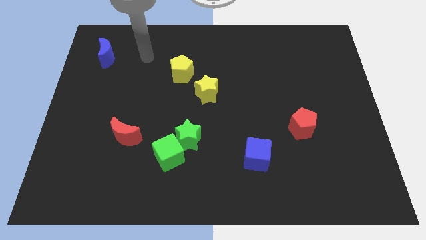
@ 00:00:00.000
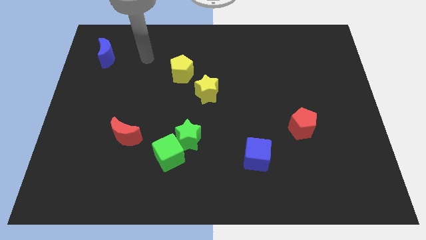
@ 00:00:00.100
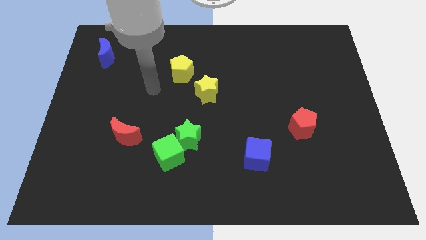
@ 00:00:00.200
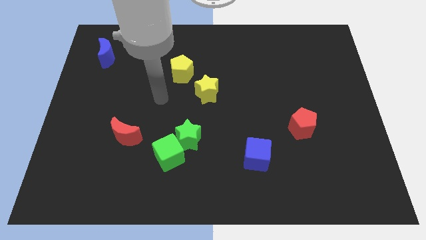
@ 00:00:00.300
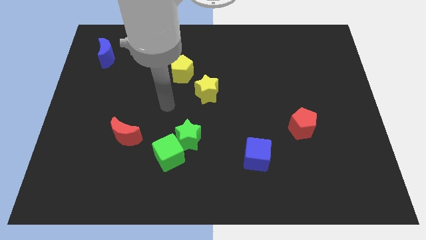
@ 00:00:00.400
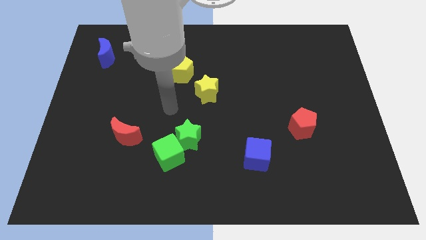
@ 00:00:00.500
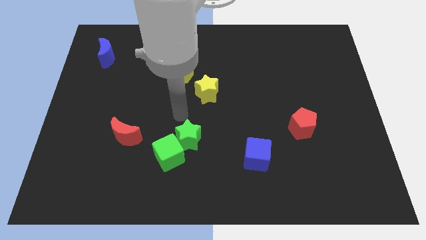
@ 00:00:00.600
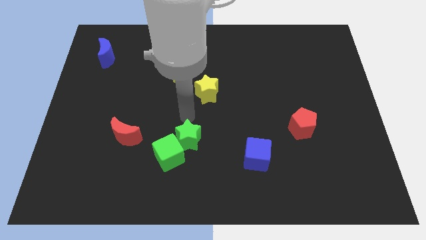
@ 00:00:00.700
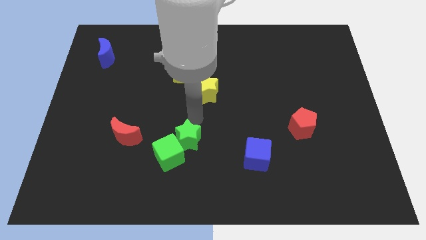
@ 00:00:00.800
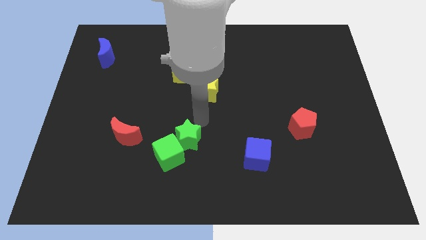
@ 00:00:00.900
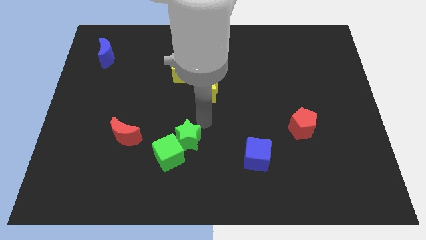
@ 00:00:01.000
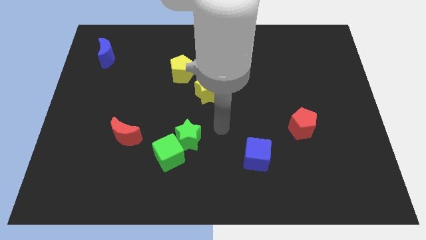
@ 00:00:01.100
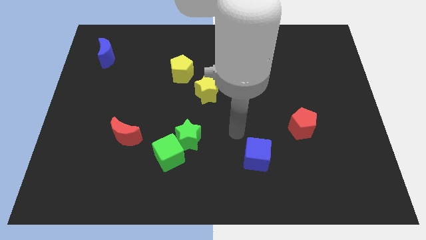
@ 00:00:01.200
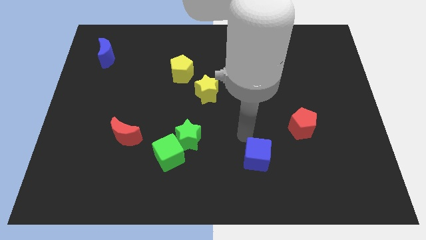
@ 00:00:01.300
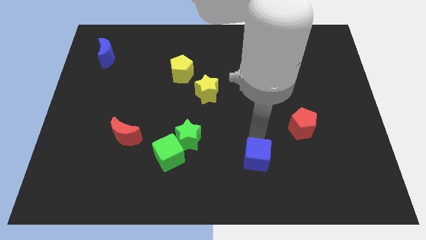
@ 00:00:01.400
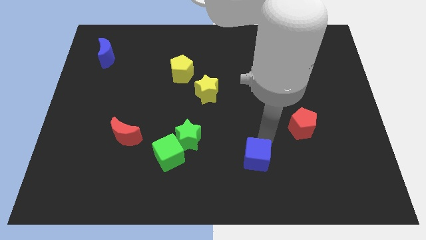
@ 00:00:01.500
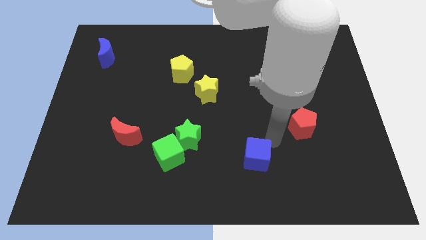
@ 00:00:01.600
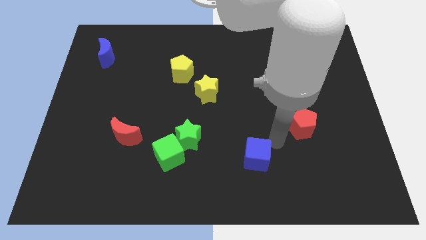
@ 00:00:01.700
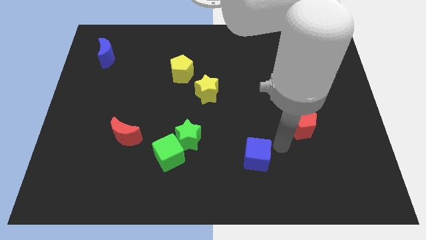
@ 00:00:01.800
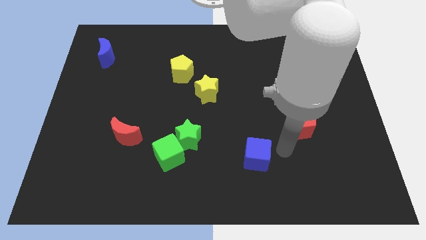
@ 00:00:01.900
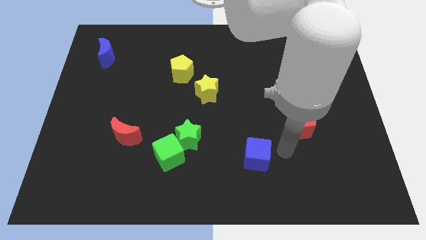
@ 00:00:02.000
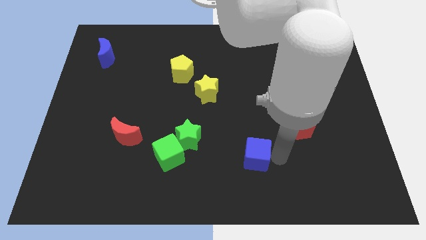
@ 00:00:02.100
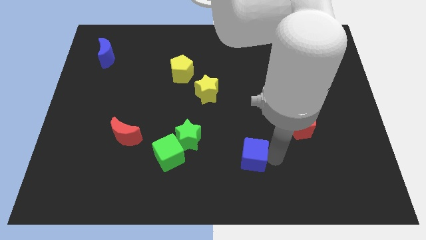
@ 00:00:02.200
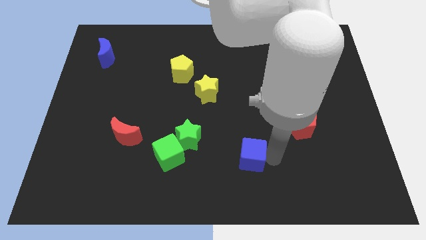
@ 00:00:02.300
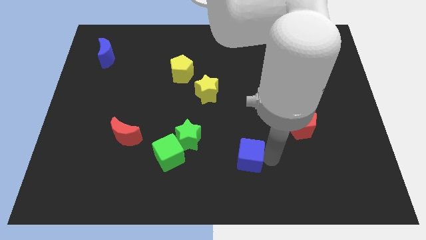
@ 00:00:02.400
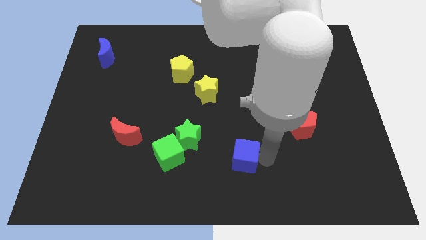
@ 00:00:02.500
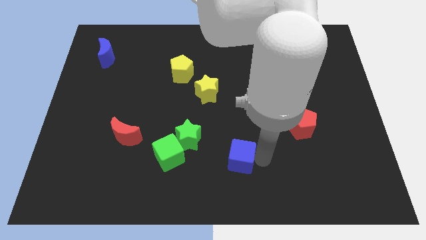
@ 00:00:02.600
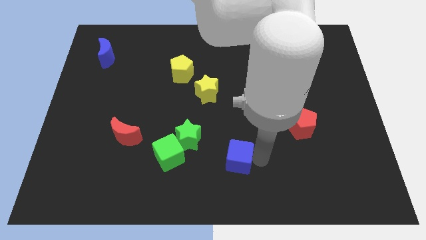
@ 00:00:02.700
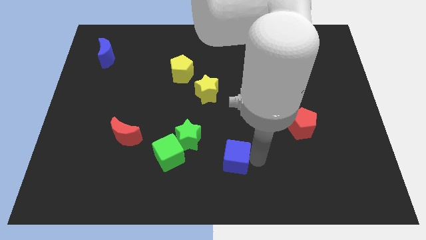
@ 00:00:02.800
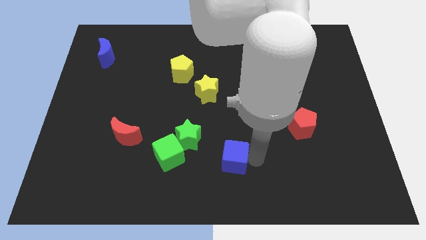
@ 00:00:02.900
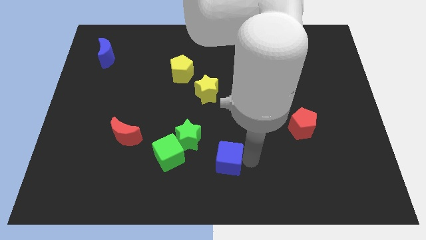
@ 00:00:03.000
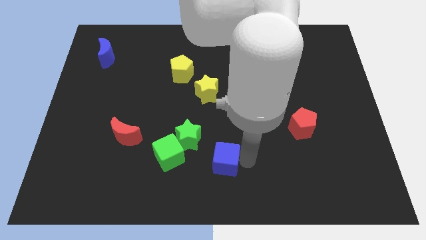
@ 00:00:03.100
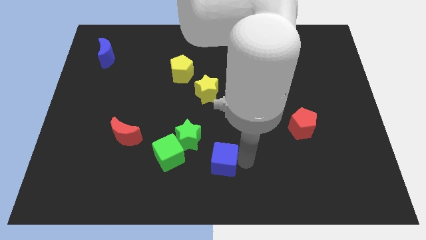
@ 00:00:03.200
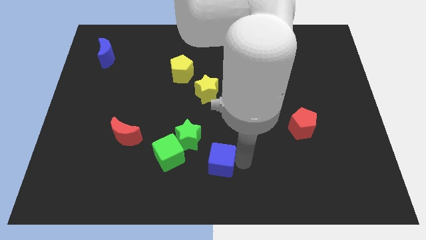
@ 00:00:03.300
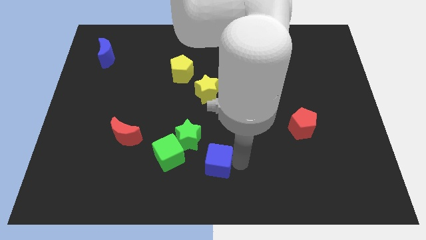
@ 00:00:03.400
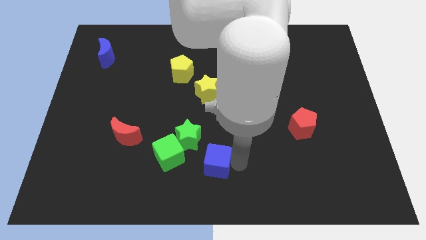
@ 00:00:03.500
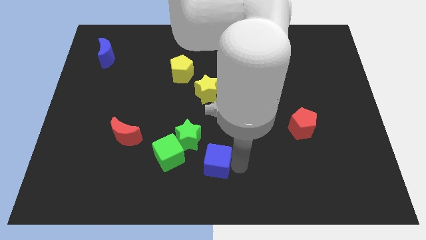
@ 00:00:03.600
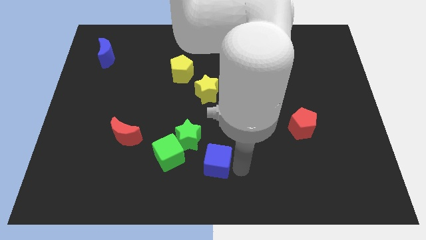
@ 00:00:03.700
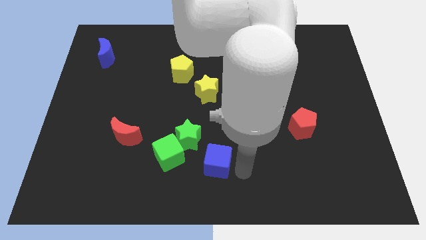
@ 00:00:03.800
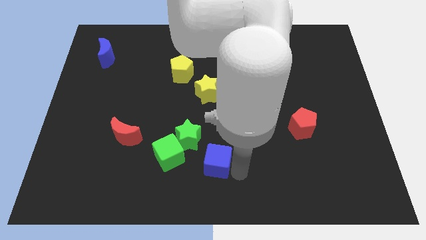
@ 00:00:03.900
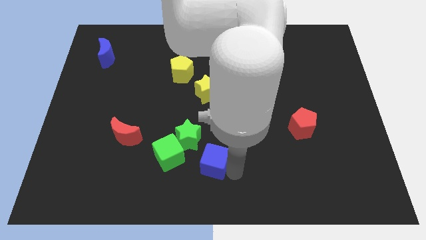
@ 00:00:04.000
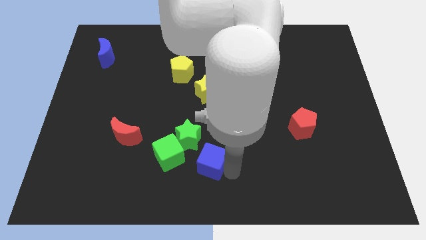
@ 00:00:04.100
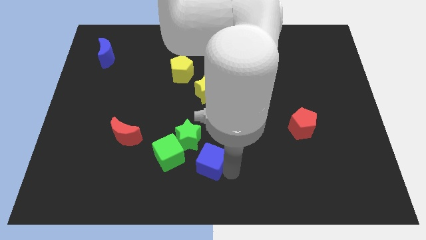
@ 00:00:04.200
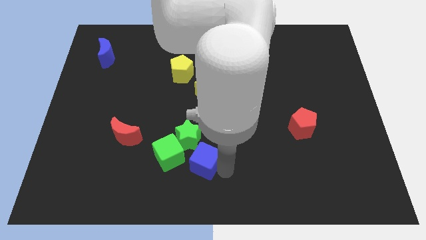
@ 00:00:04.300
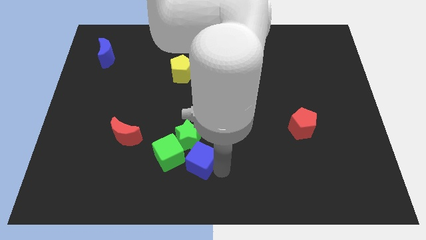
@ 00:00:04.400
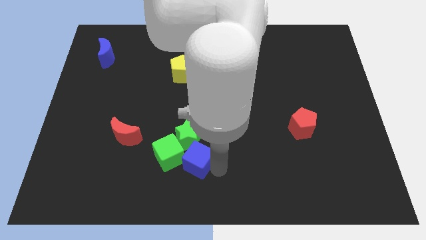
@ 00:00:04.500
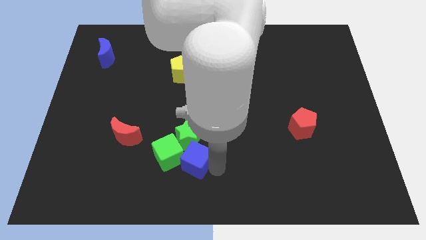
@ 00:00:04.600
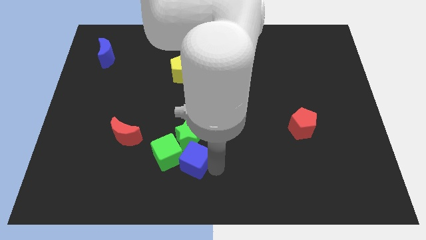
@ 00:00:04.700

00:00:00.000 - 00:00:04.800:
push the blue cube towards the green cube

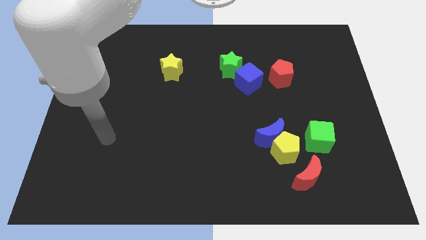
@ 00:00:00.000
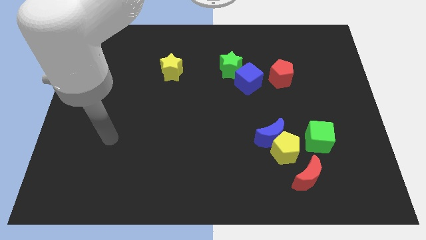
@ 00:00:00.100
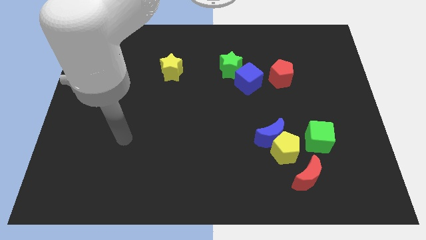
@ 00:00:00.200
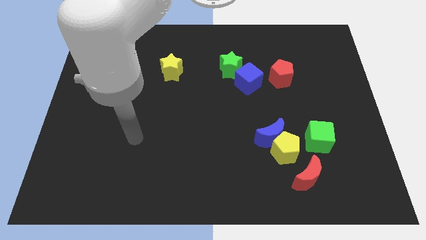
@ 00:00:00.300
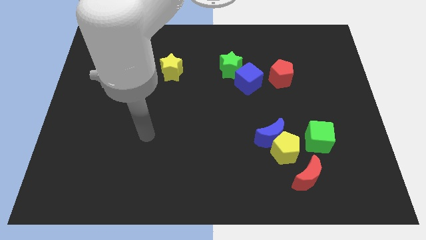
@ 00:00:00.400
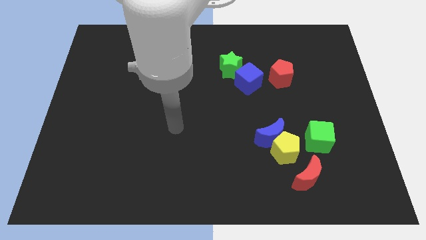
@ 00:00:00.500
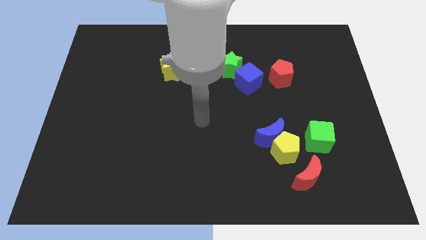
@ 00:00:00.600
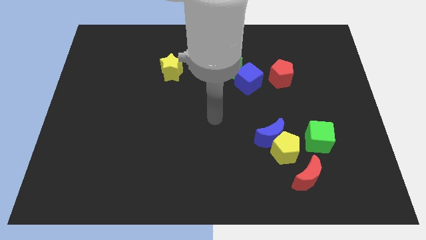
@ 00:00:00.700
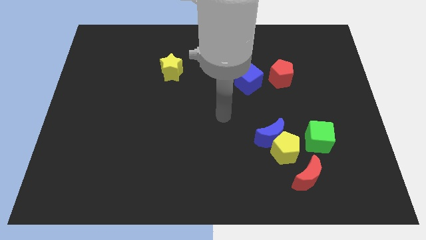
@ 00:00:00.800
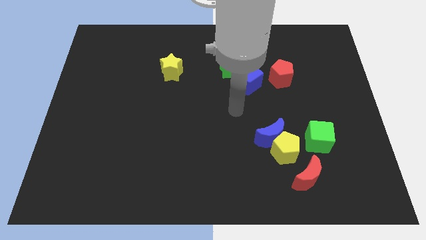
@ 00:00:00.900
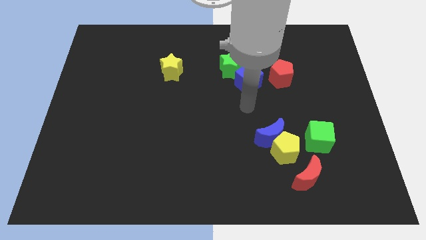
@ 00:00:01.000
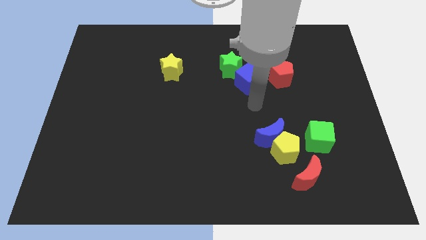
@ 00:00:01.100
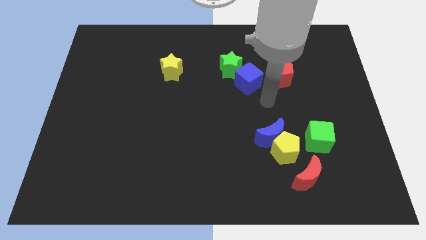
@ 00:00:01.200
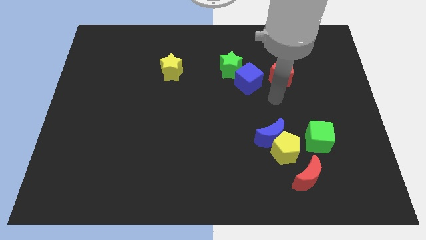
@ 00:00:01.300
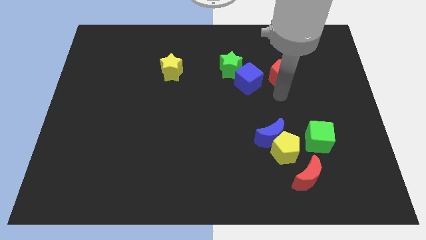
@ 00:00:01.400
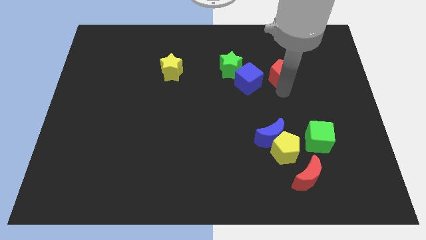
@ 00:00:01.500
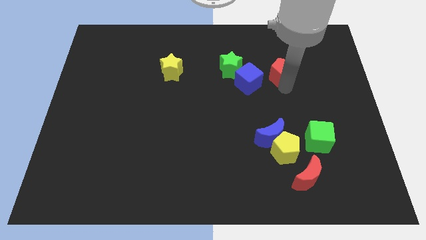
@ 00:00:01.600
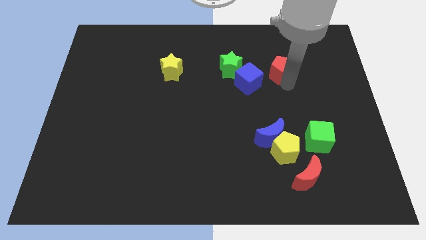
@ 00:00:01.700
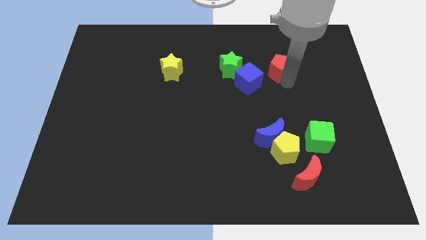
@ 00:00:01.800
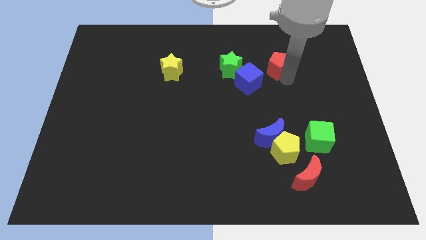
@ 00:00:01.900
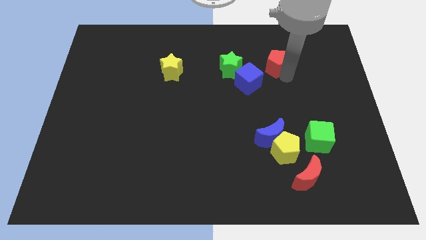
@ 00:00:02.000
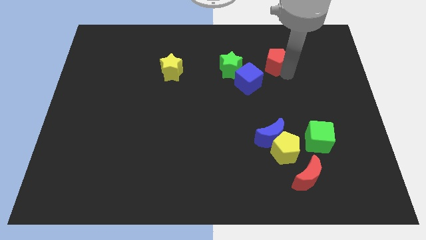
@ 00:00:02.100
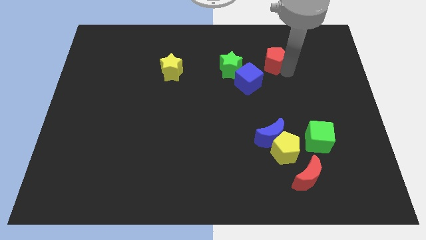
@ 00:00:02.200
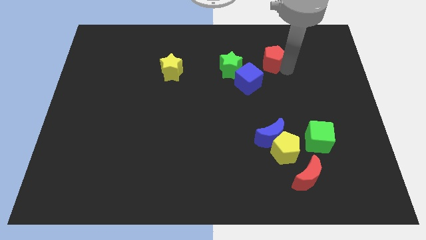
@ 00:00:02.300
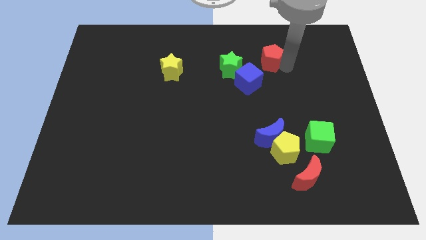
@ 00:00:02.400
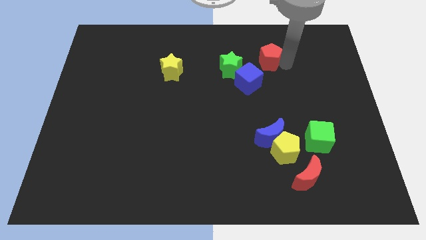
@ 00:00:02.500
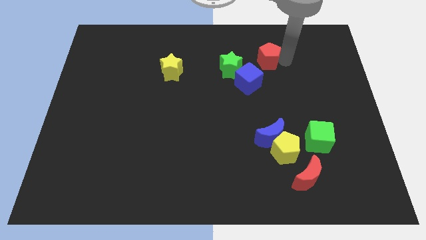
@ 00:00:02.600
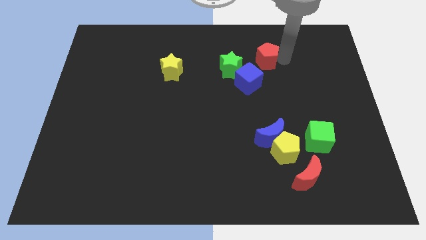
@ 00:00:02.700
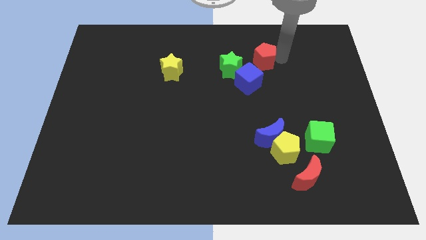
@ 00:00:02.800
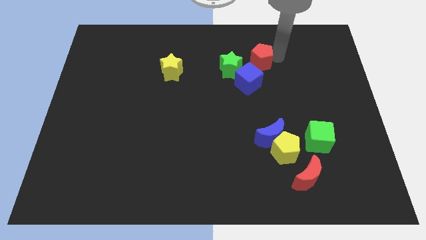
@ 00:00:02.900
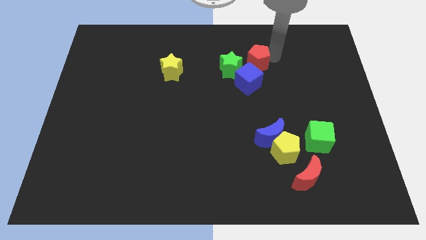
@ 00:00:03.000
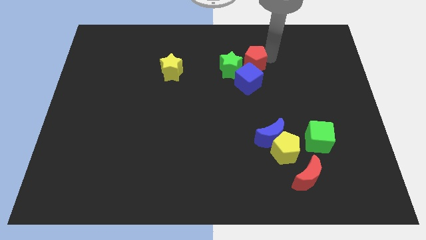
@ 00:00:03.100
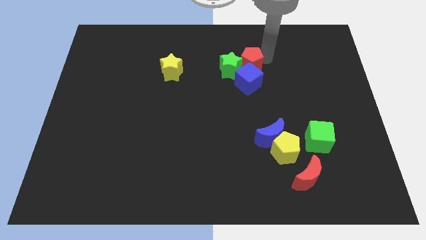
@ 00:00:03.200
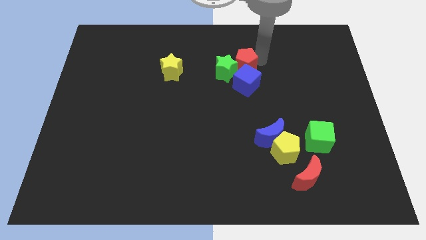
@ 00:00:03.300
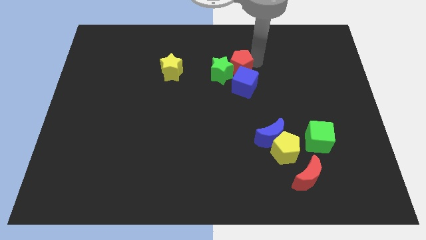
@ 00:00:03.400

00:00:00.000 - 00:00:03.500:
put the red pentagon next to the green star

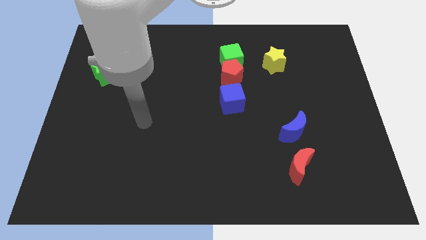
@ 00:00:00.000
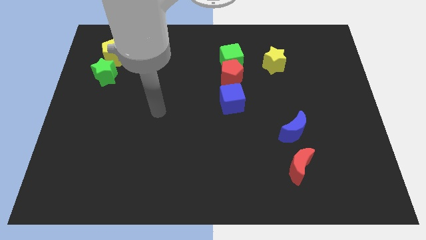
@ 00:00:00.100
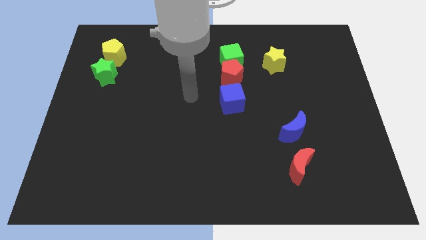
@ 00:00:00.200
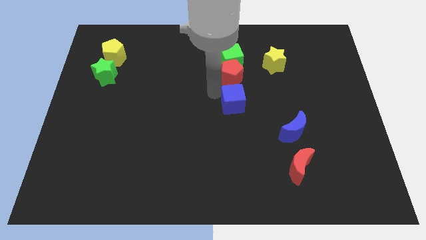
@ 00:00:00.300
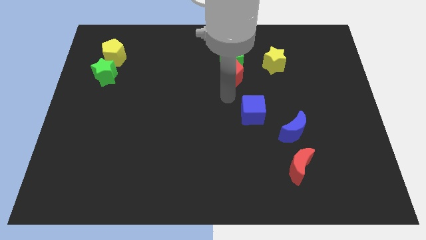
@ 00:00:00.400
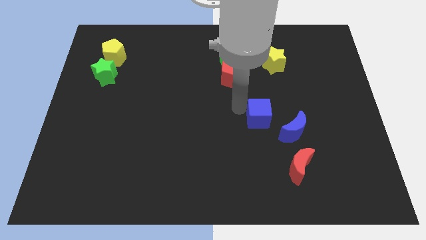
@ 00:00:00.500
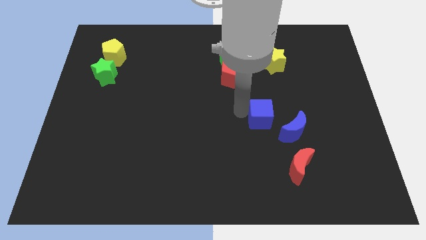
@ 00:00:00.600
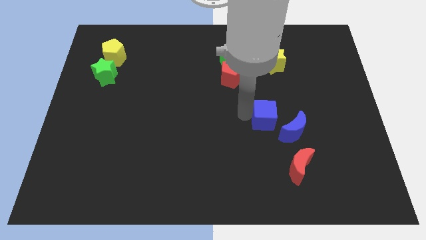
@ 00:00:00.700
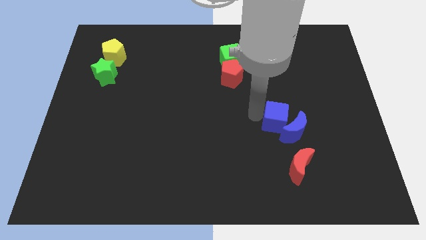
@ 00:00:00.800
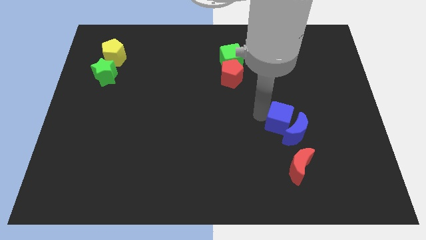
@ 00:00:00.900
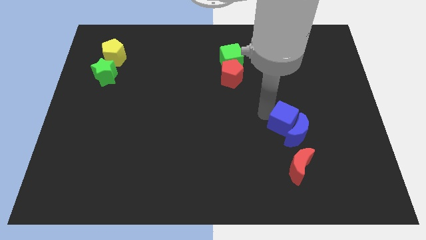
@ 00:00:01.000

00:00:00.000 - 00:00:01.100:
move the blue cube close to the blue moon
